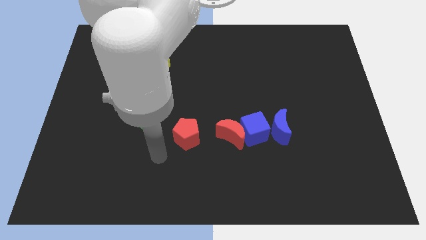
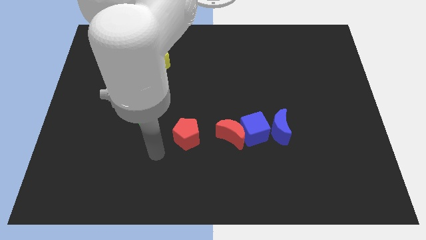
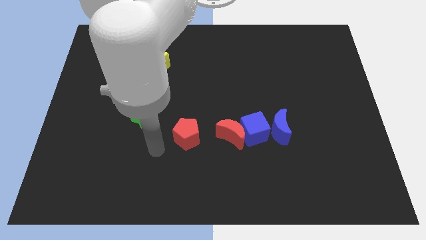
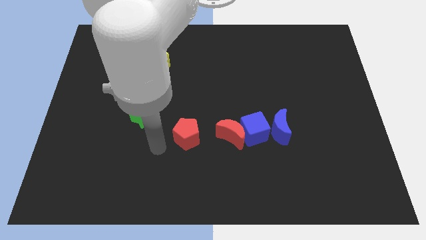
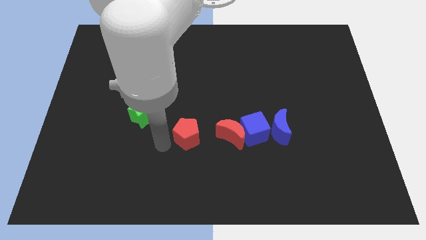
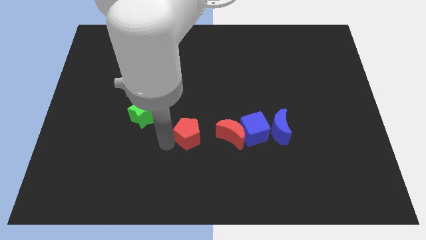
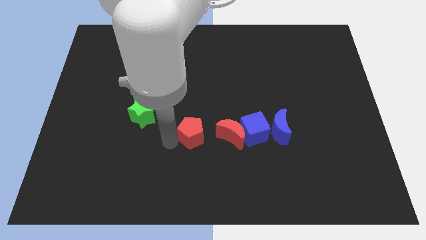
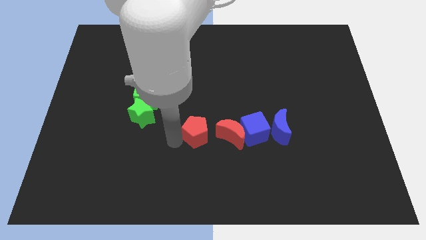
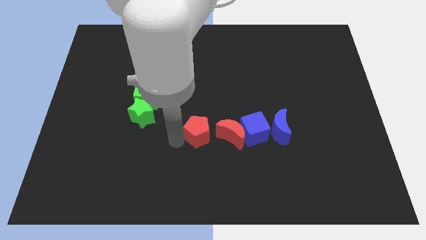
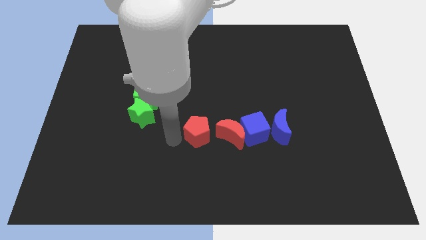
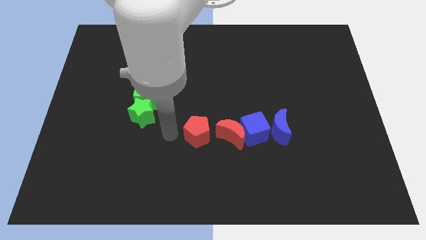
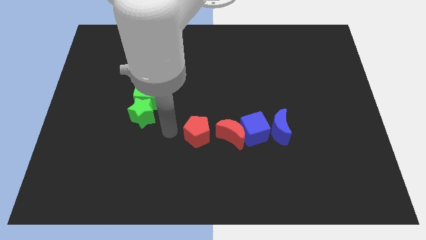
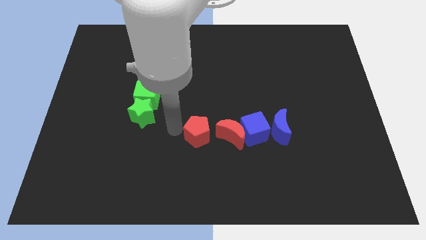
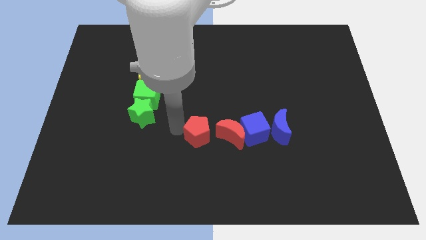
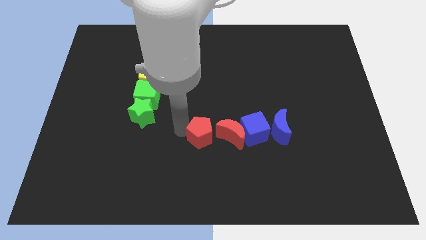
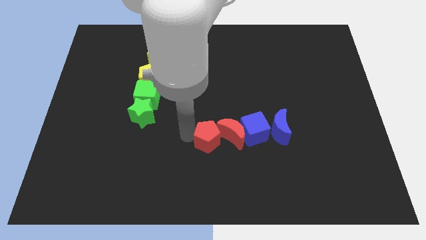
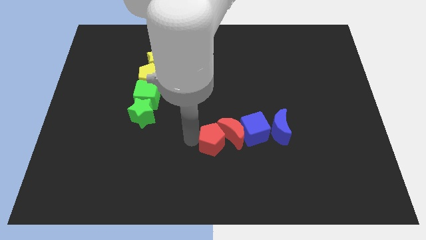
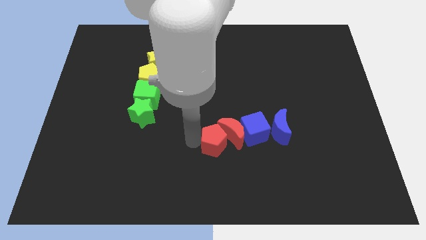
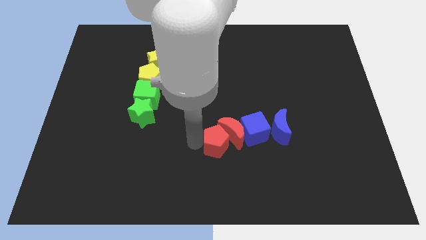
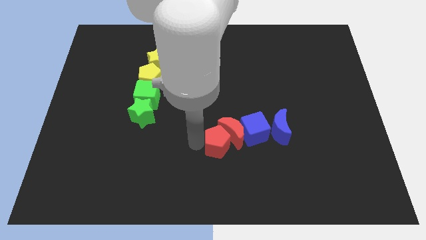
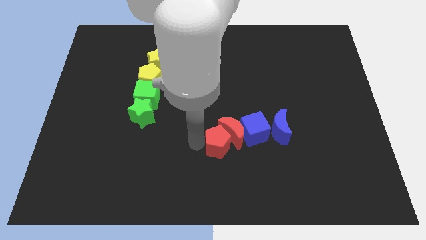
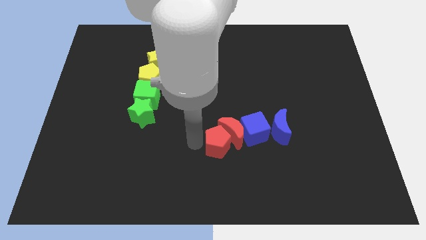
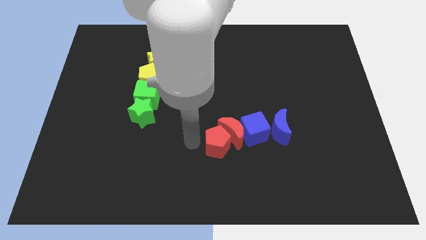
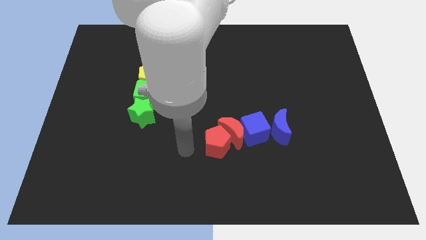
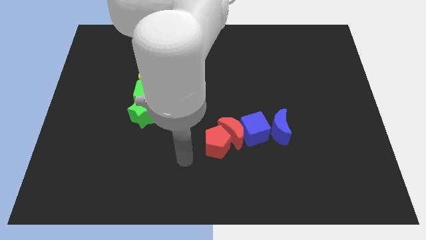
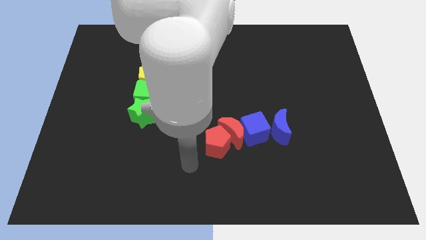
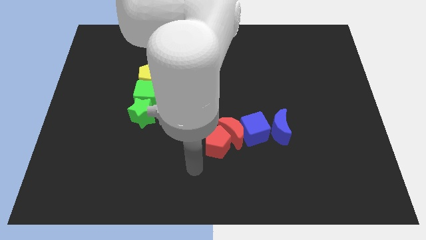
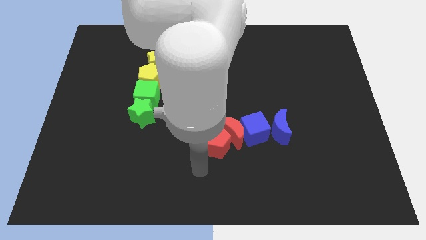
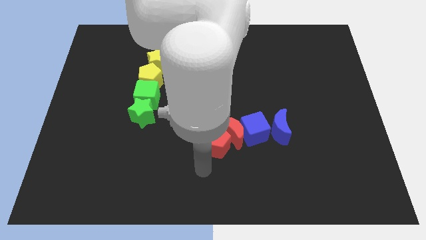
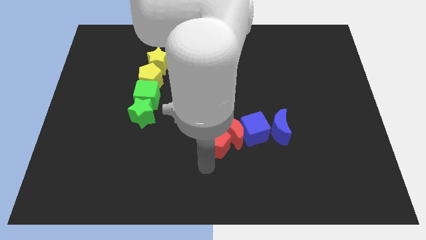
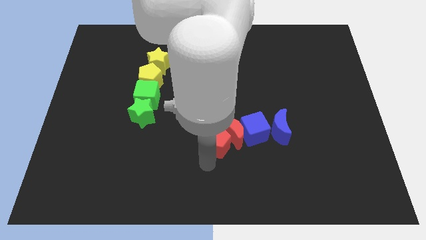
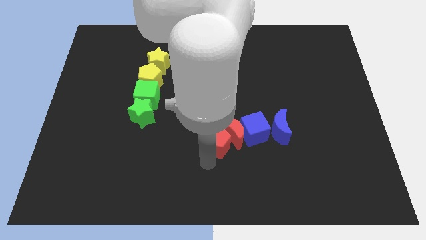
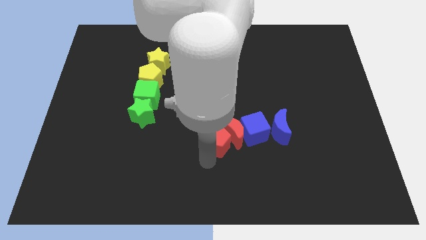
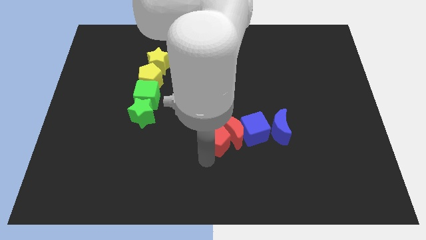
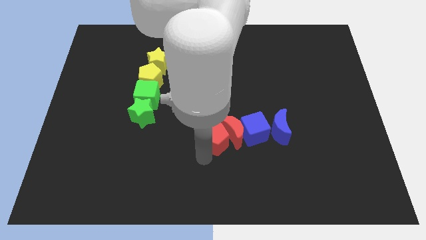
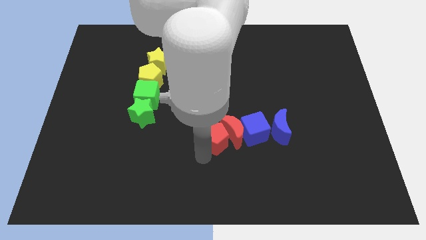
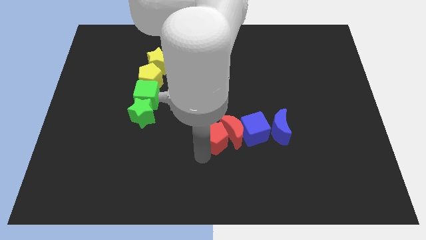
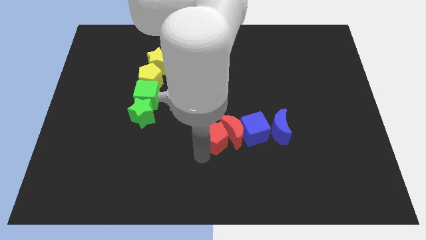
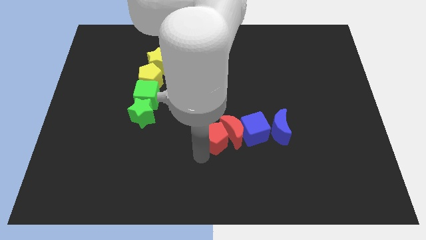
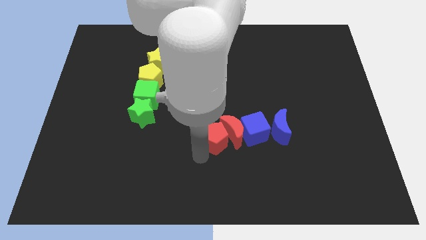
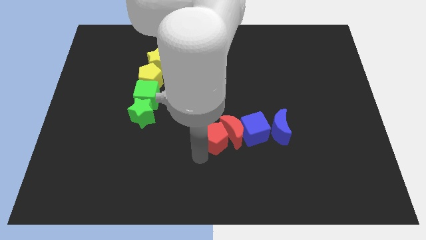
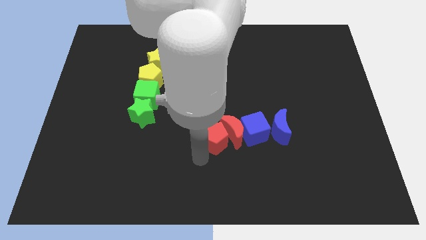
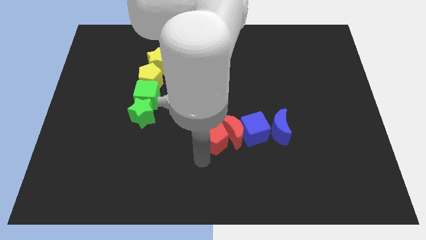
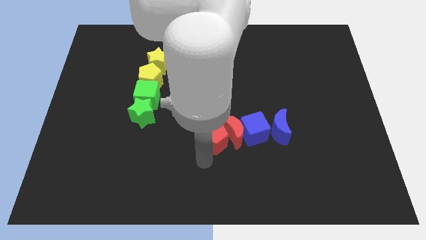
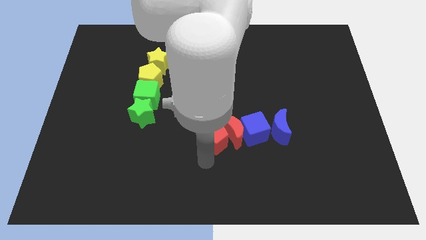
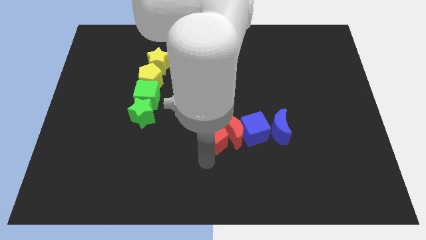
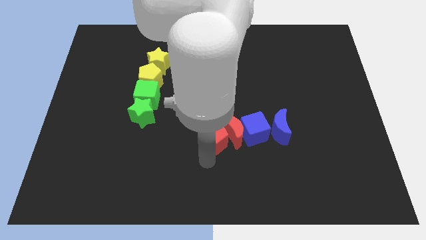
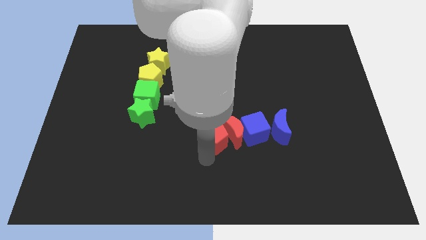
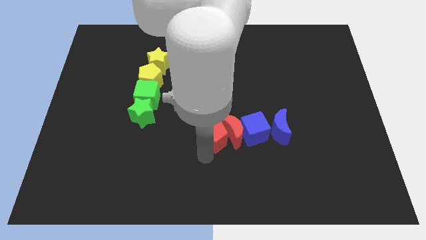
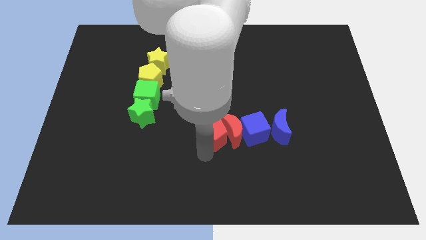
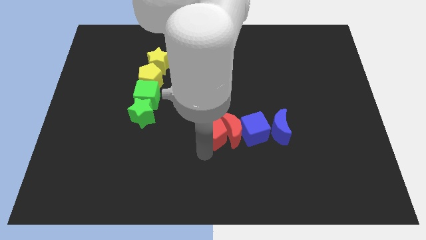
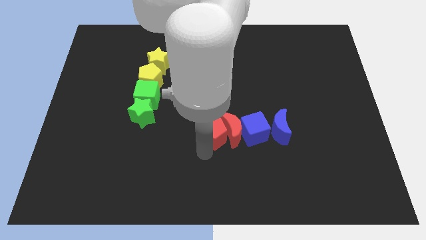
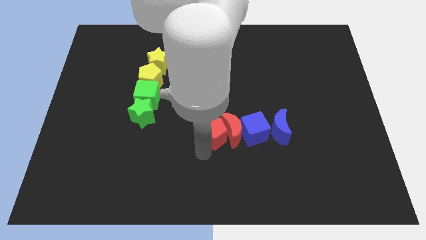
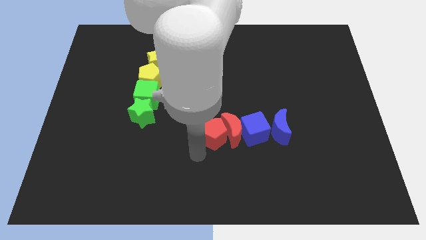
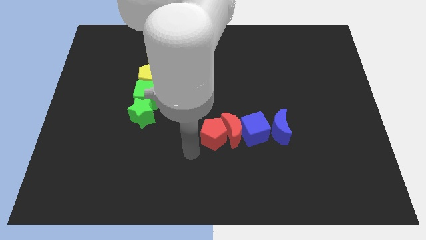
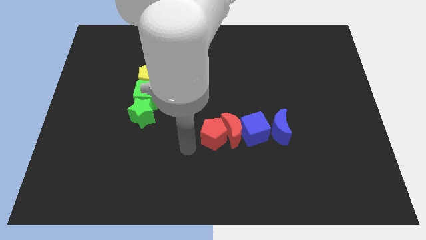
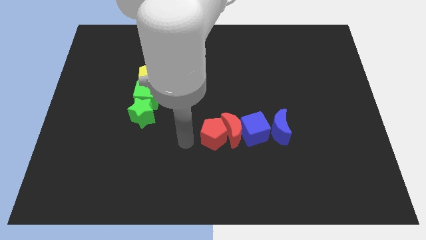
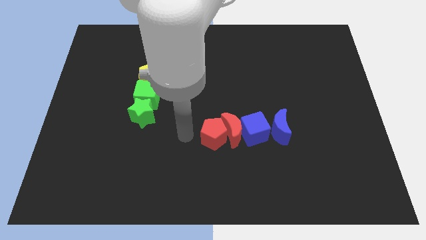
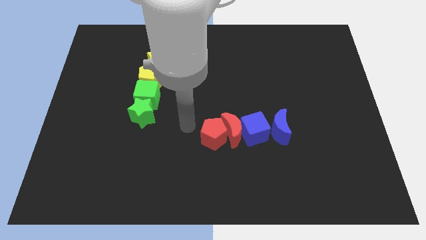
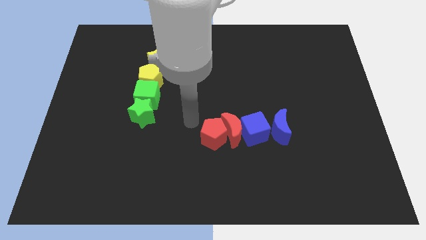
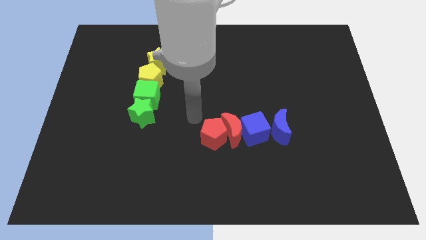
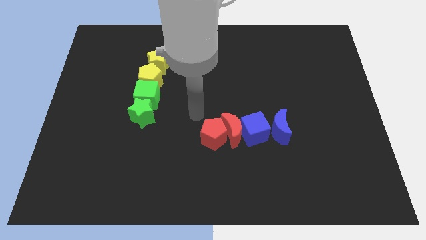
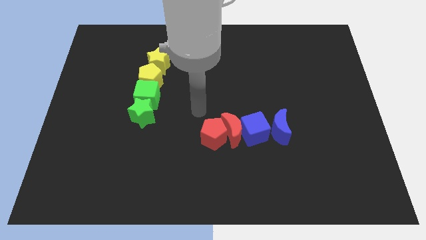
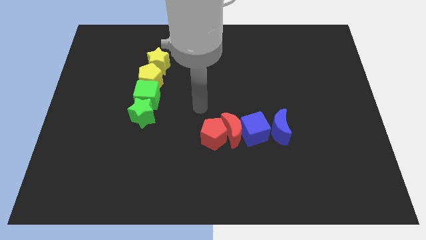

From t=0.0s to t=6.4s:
push the red pentagon close to the right side of the red crescent

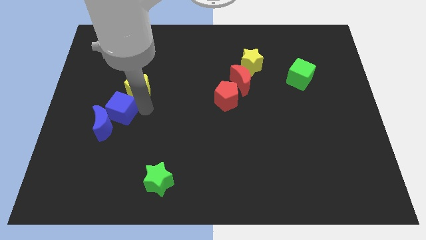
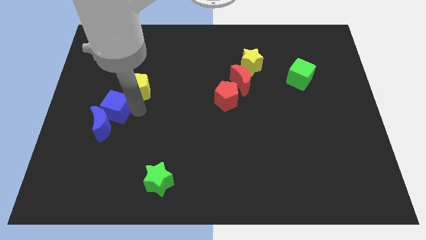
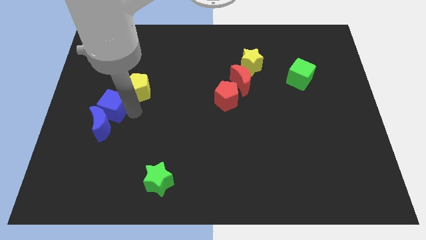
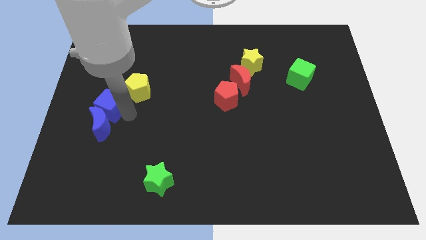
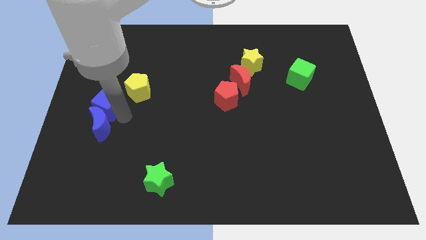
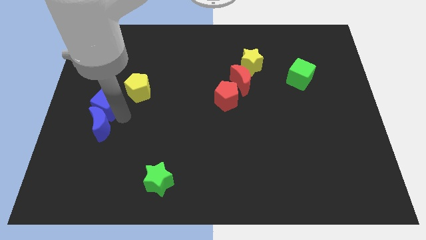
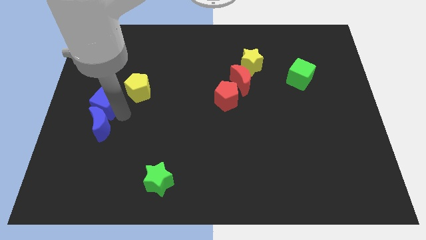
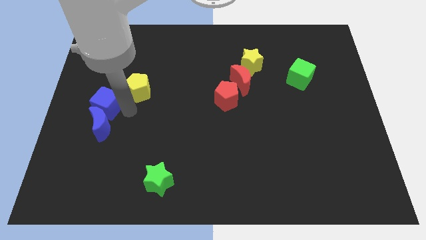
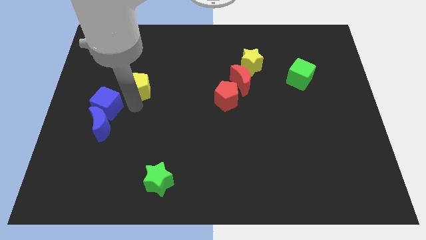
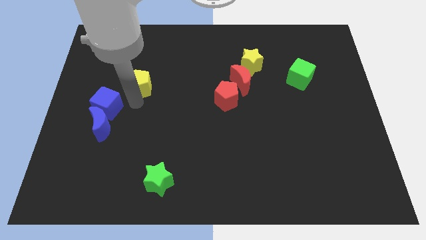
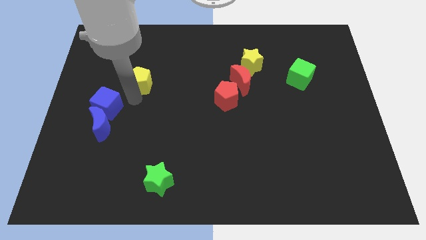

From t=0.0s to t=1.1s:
separate yellow pentagon from blue cube

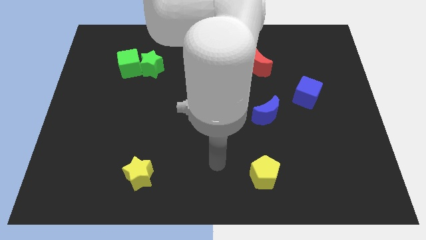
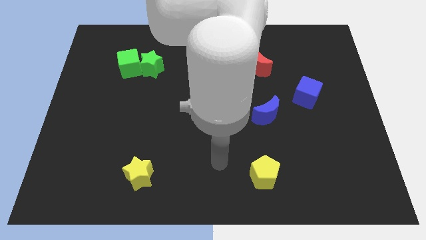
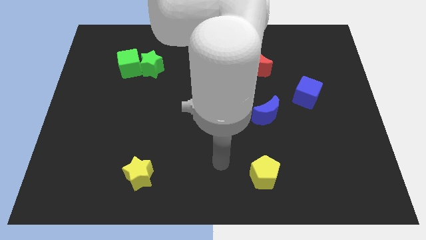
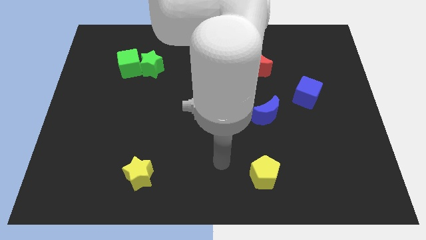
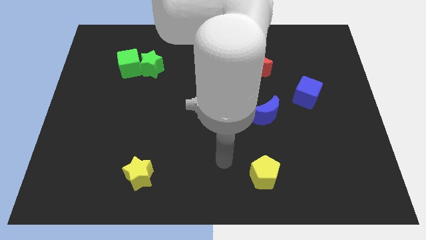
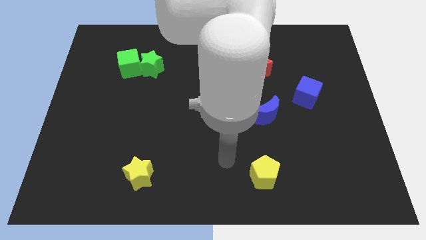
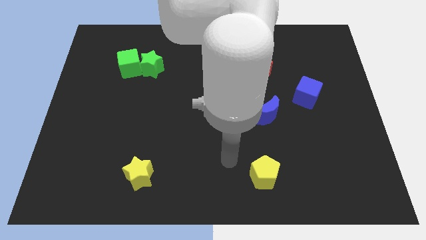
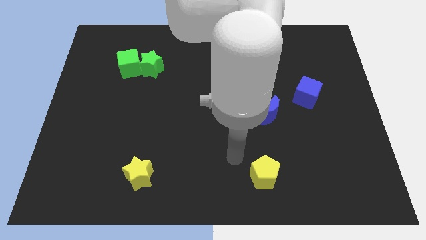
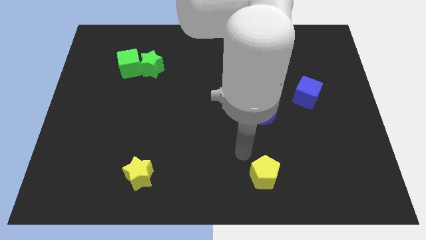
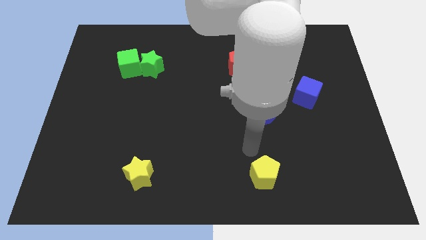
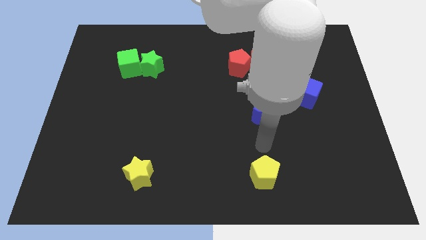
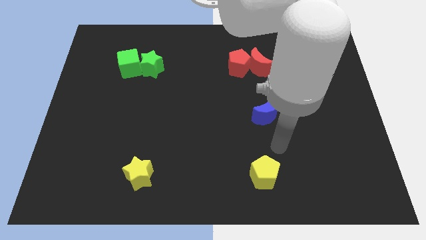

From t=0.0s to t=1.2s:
place your arm at the top of yellow pentagon

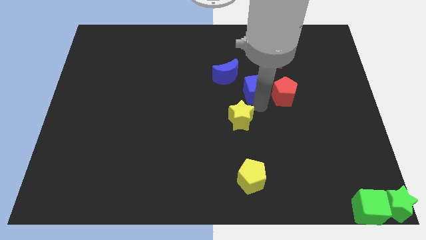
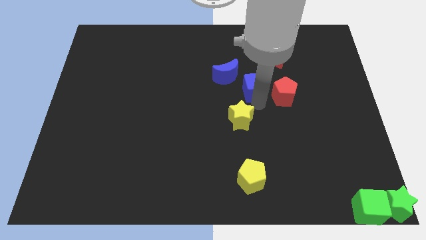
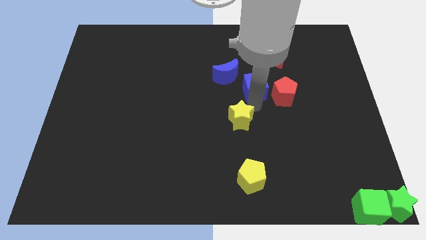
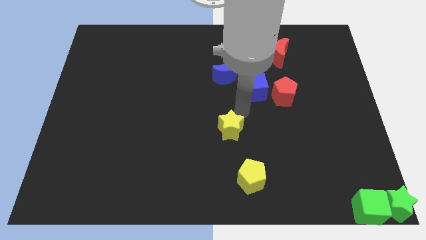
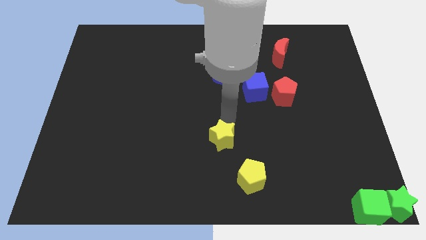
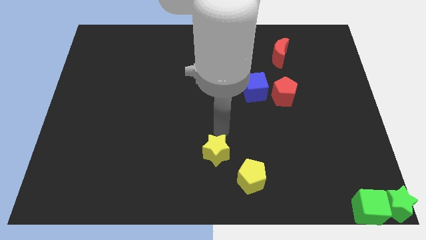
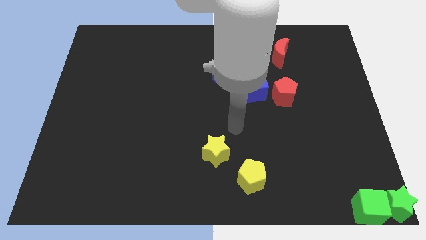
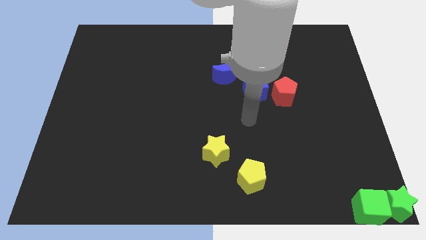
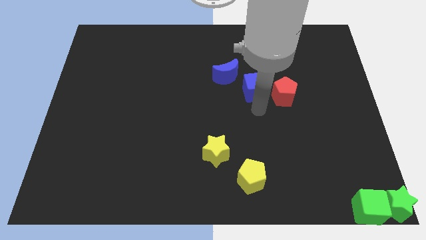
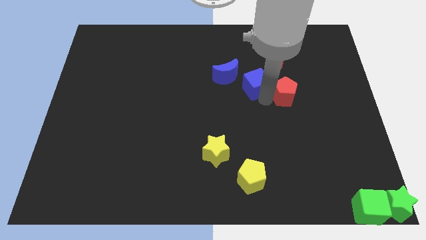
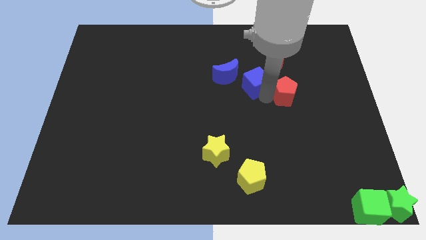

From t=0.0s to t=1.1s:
place yellow star to the top left of yellow pentagon
